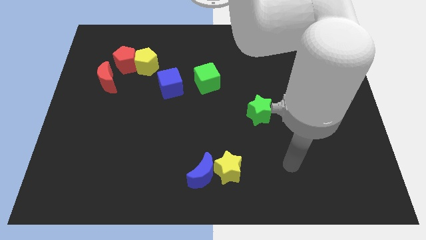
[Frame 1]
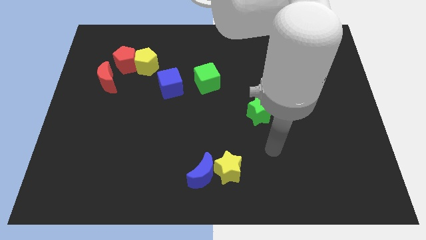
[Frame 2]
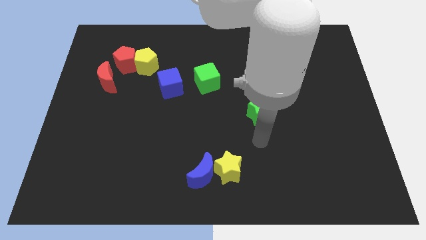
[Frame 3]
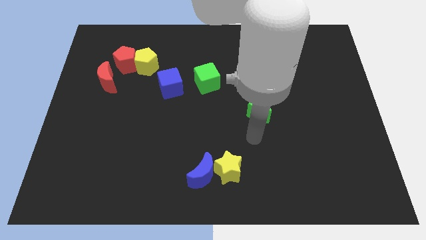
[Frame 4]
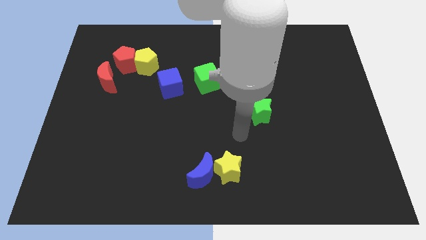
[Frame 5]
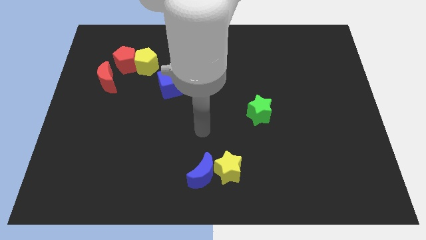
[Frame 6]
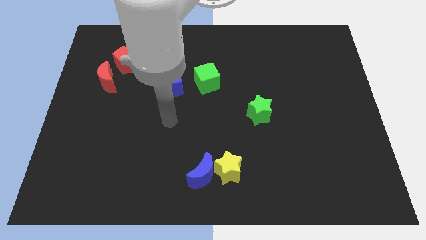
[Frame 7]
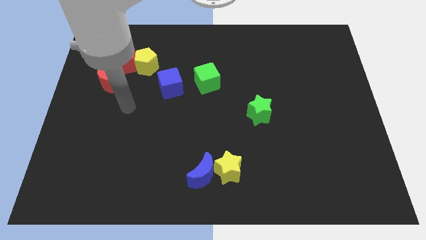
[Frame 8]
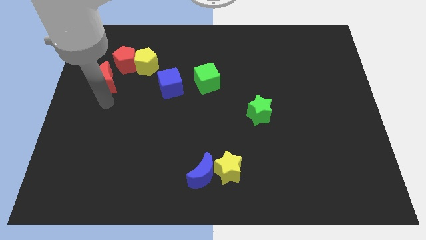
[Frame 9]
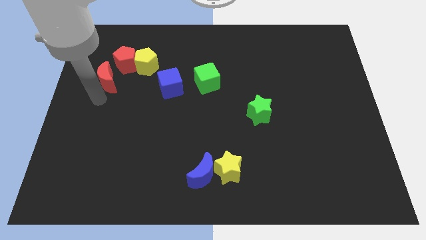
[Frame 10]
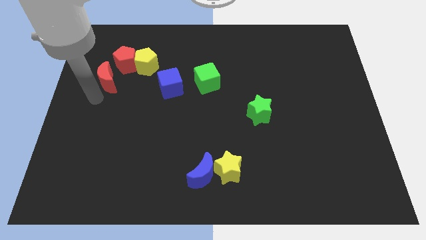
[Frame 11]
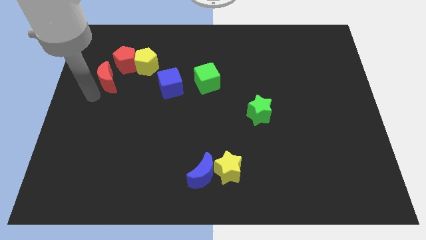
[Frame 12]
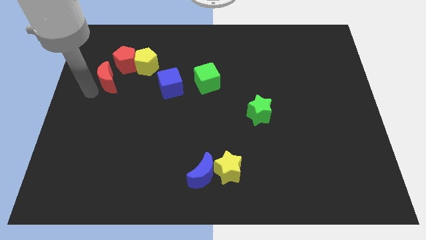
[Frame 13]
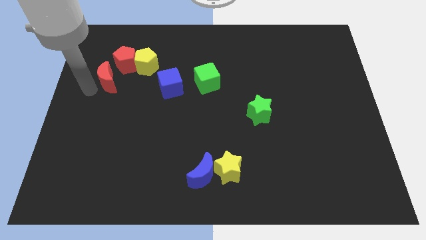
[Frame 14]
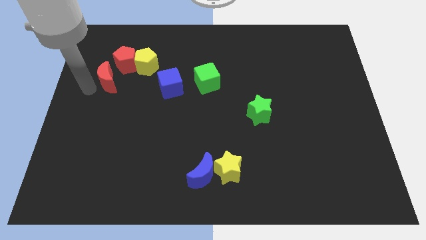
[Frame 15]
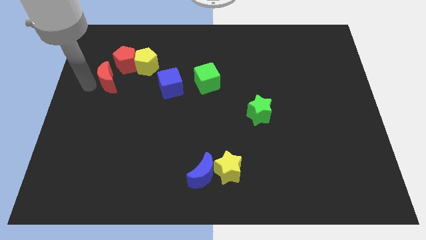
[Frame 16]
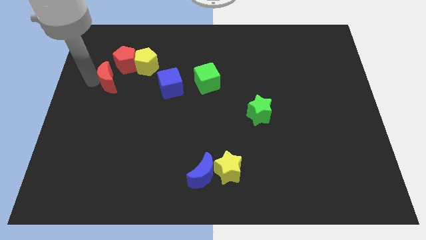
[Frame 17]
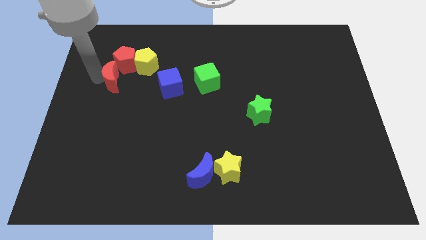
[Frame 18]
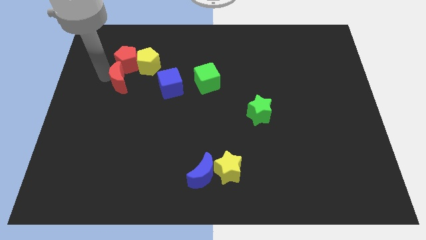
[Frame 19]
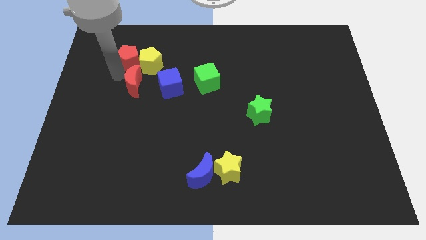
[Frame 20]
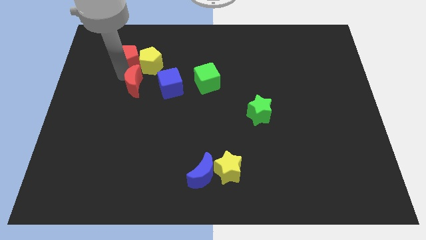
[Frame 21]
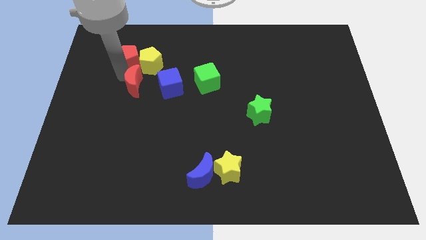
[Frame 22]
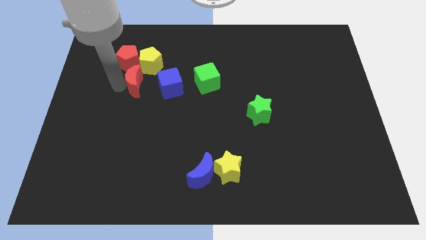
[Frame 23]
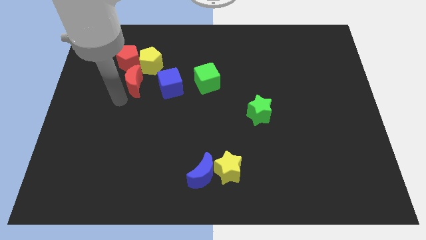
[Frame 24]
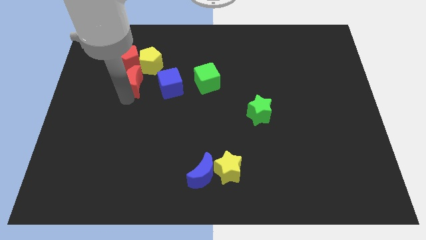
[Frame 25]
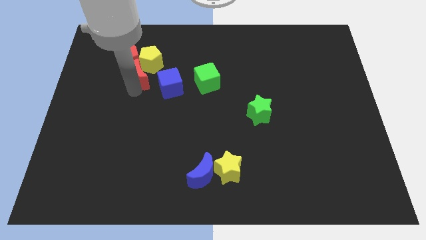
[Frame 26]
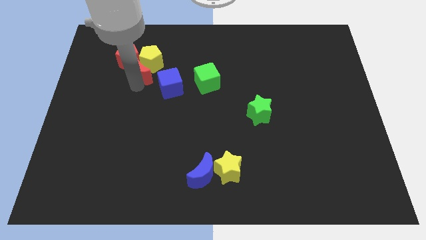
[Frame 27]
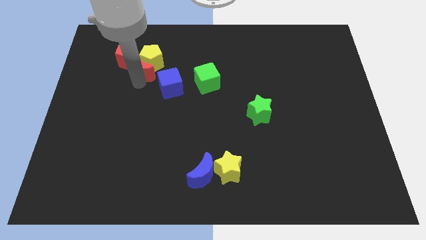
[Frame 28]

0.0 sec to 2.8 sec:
slide the red moon towards the yellow pentagon

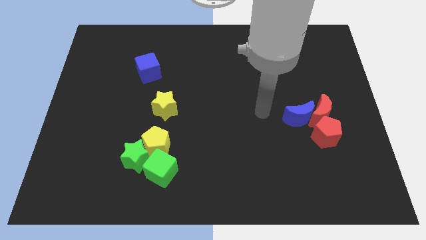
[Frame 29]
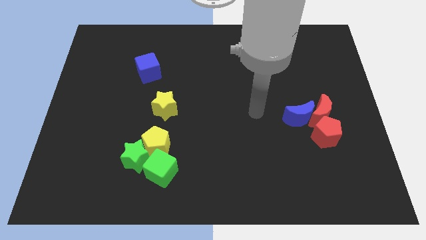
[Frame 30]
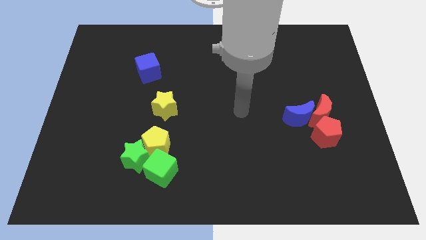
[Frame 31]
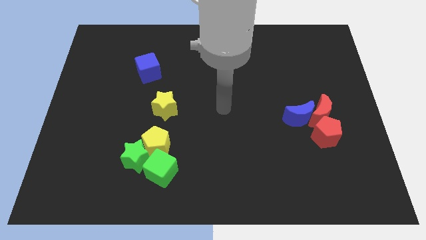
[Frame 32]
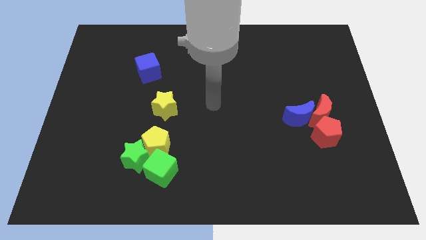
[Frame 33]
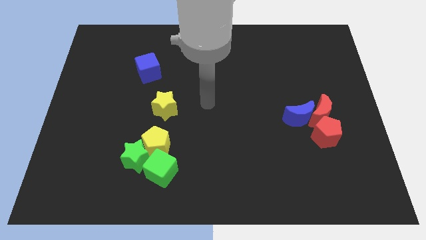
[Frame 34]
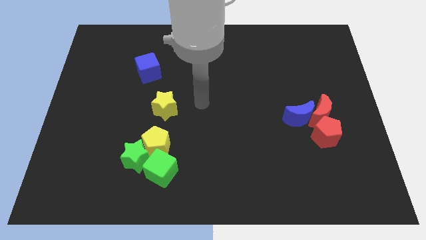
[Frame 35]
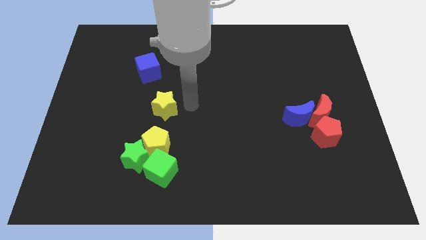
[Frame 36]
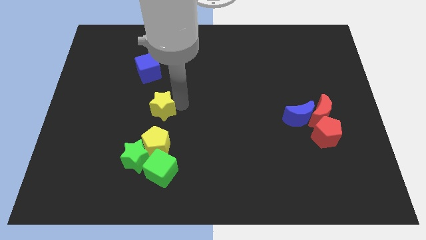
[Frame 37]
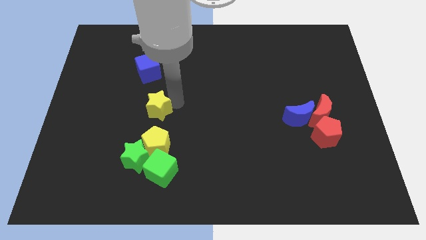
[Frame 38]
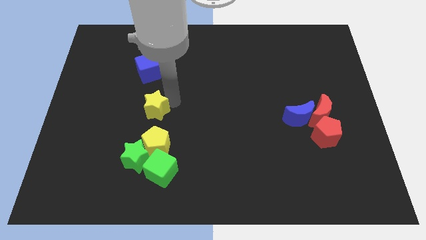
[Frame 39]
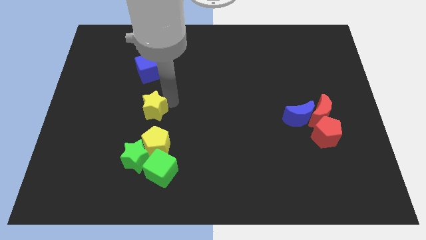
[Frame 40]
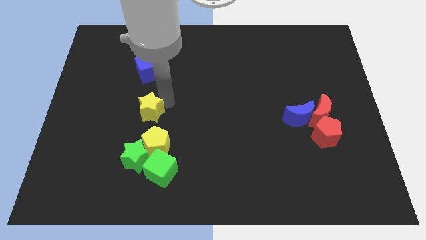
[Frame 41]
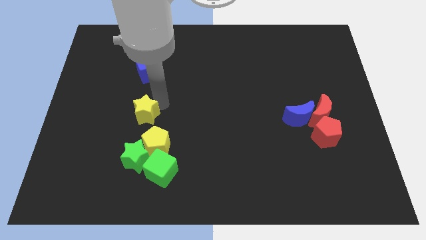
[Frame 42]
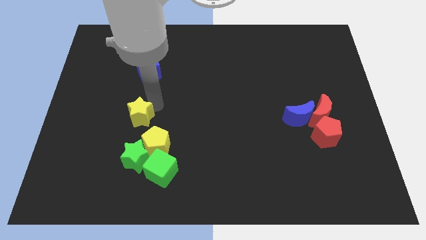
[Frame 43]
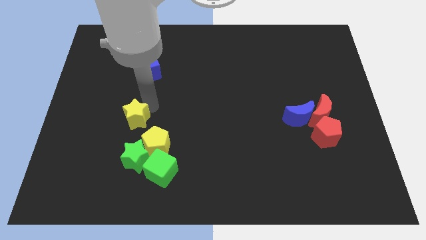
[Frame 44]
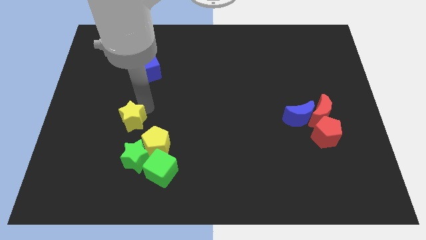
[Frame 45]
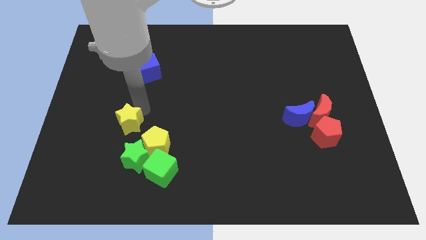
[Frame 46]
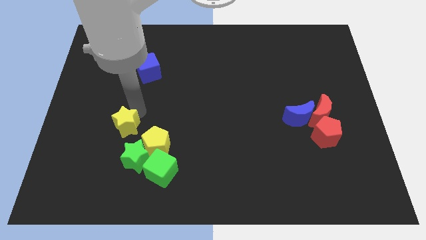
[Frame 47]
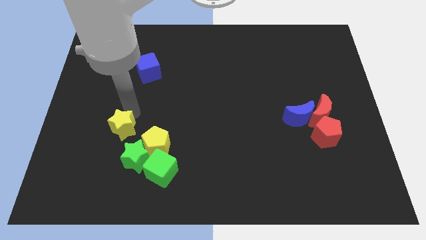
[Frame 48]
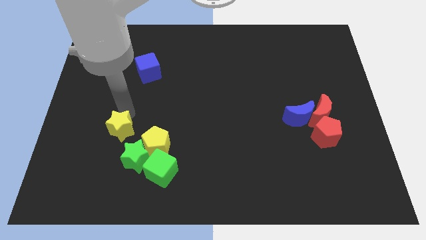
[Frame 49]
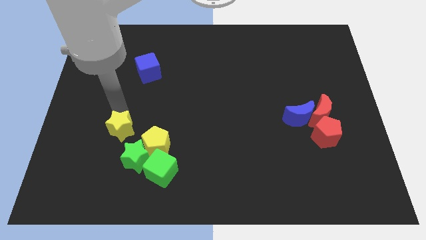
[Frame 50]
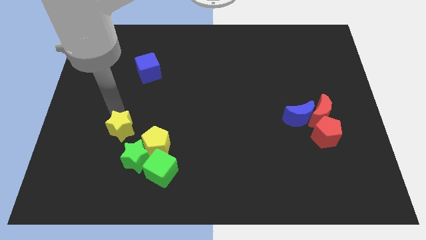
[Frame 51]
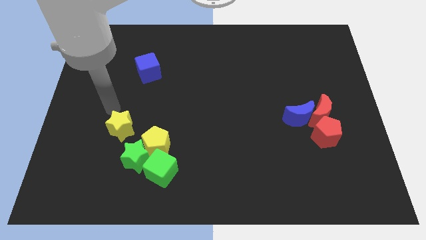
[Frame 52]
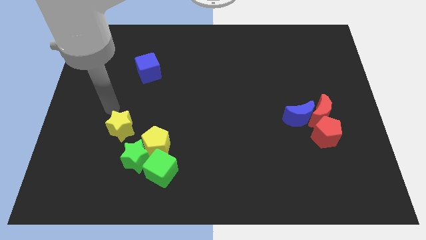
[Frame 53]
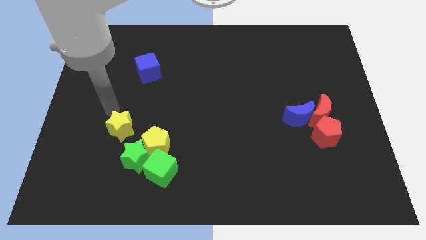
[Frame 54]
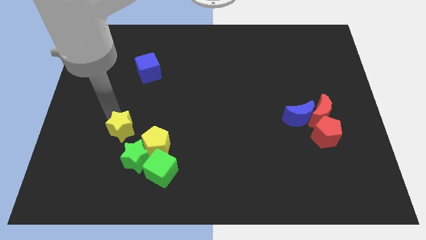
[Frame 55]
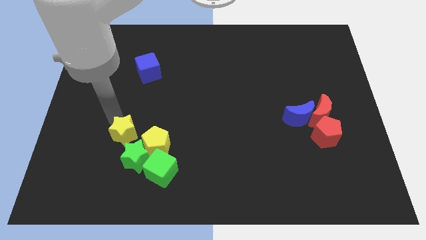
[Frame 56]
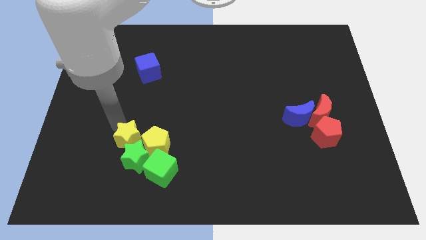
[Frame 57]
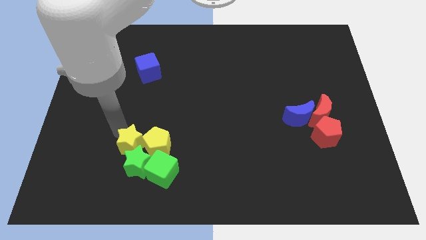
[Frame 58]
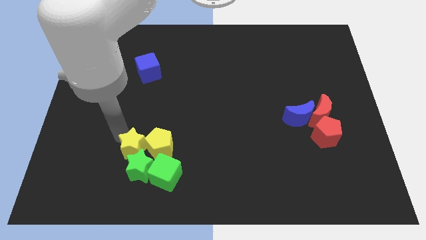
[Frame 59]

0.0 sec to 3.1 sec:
move the yellow star to the green star

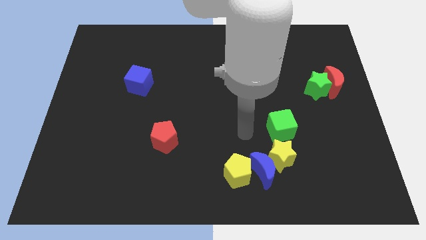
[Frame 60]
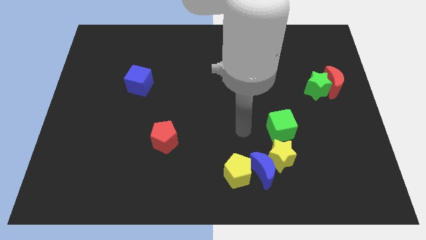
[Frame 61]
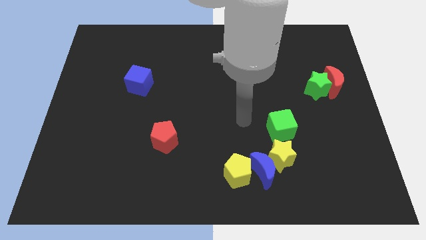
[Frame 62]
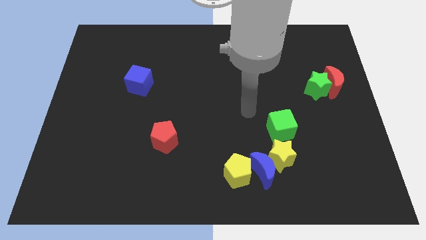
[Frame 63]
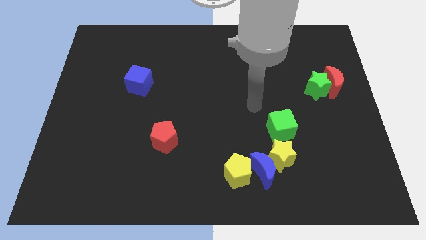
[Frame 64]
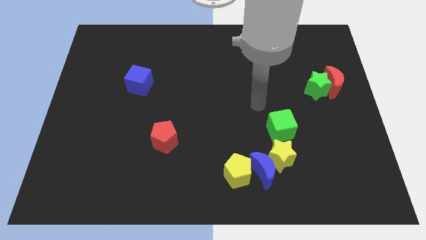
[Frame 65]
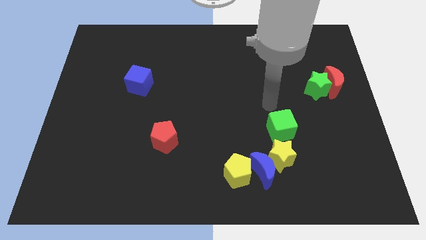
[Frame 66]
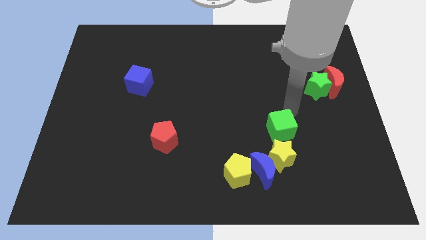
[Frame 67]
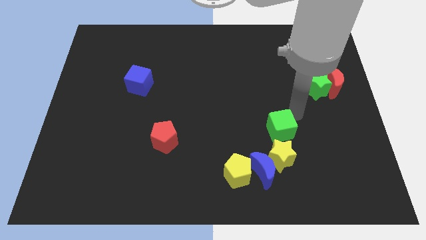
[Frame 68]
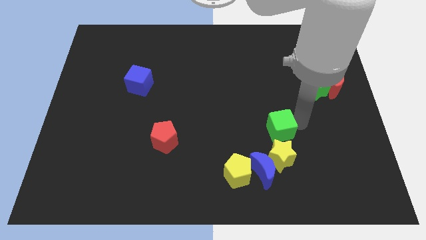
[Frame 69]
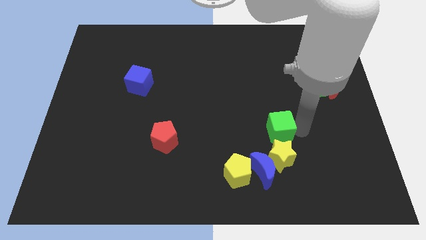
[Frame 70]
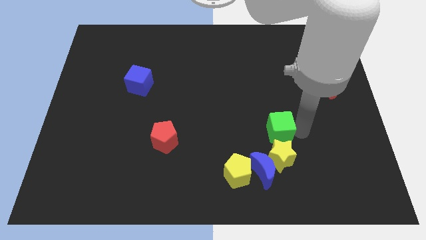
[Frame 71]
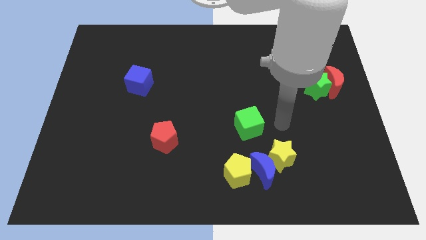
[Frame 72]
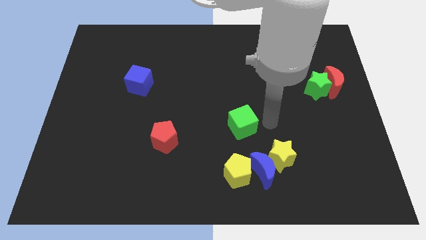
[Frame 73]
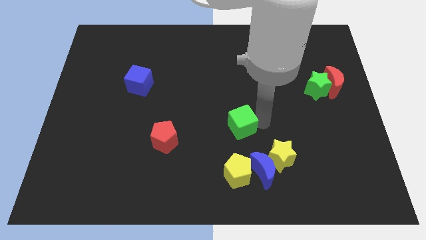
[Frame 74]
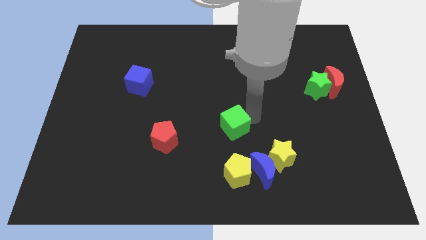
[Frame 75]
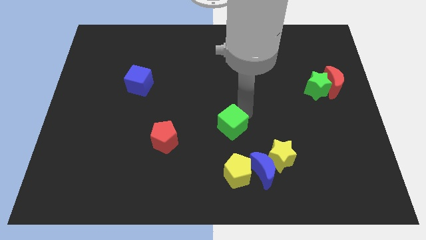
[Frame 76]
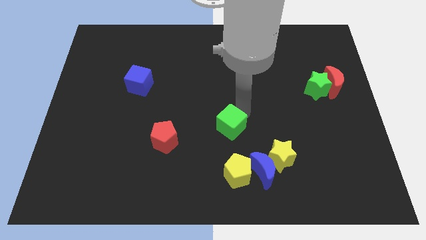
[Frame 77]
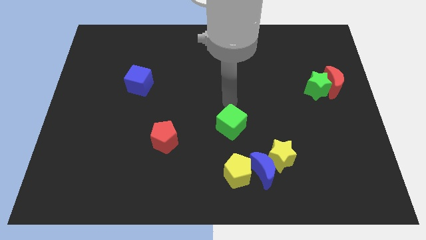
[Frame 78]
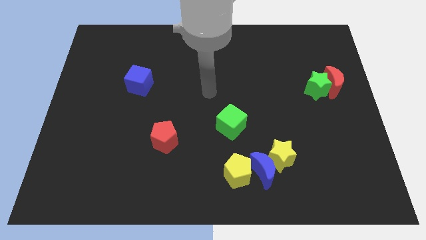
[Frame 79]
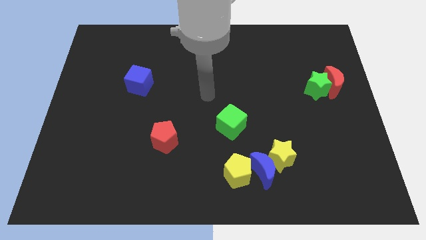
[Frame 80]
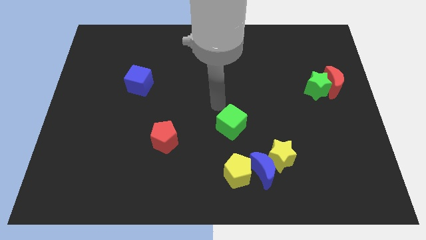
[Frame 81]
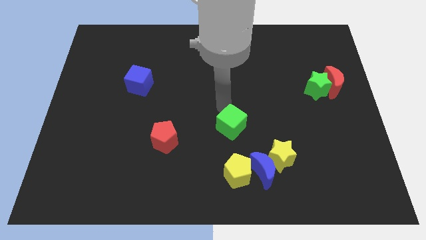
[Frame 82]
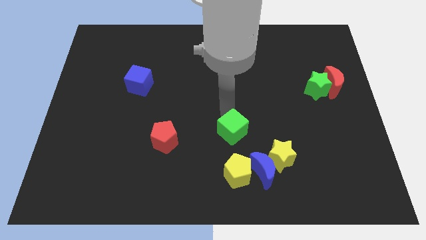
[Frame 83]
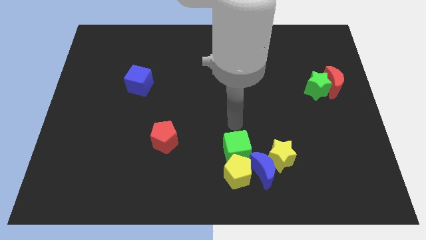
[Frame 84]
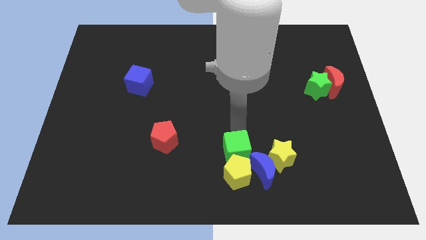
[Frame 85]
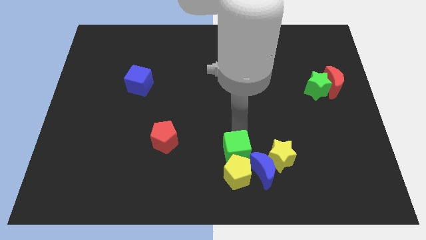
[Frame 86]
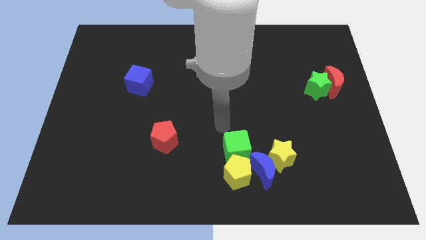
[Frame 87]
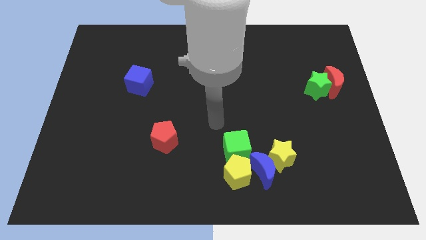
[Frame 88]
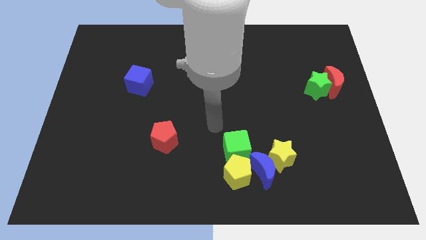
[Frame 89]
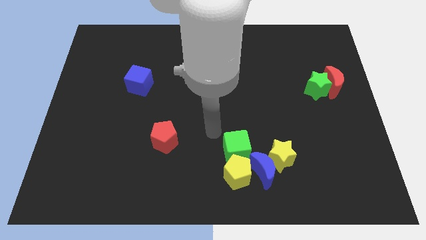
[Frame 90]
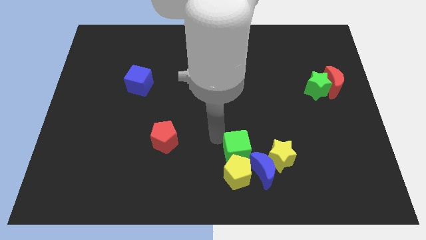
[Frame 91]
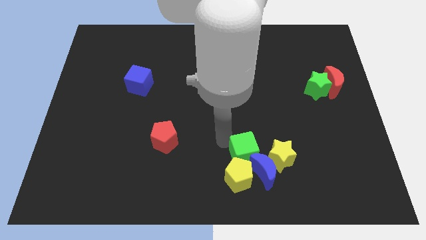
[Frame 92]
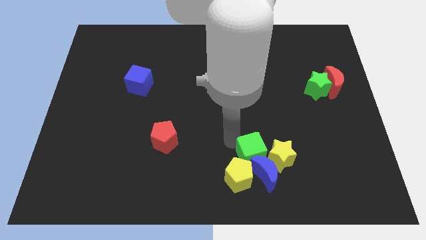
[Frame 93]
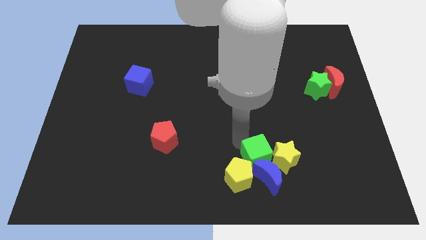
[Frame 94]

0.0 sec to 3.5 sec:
push the green cube close to the blue moon
